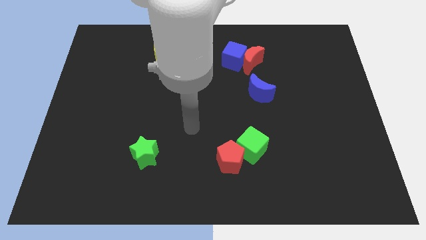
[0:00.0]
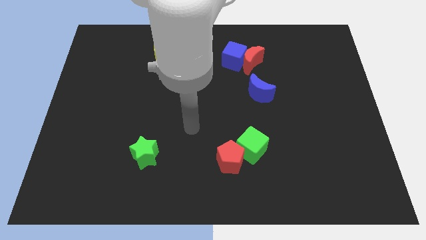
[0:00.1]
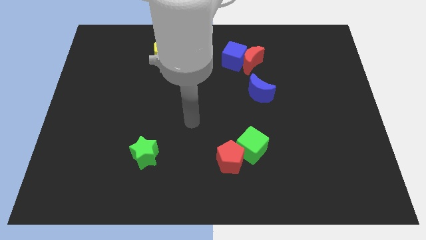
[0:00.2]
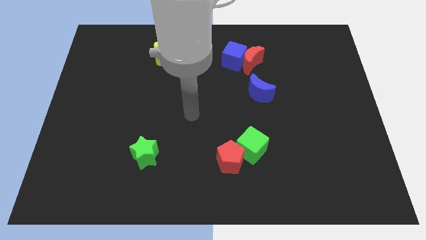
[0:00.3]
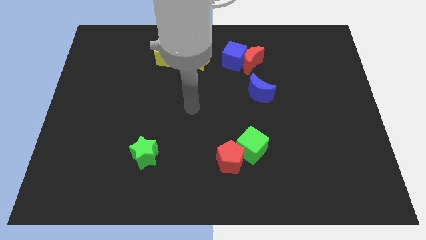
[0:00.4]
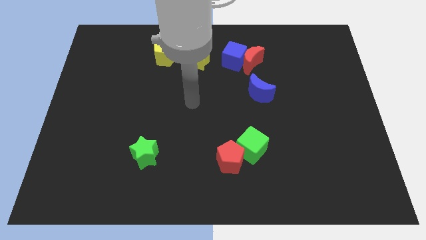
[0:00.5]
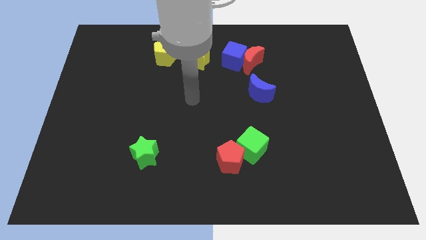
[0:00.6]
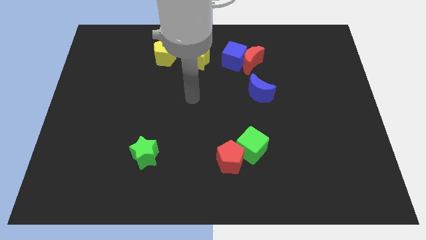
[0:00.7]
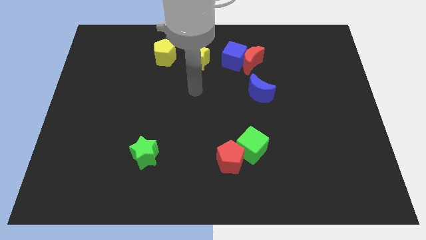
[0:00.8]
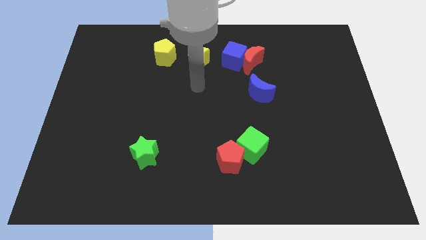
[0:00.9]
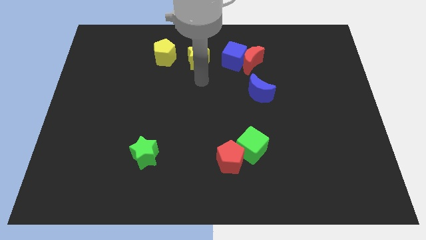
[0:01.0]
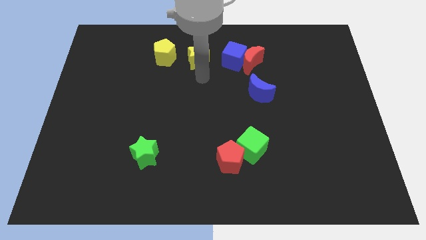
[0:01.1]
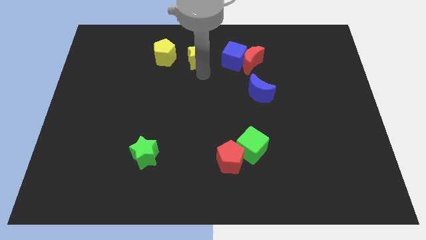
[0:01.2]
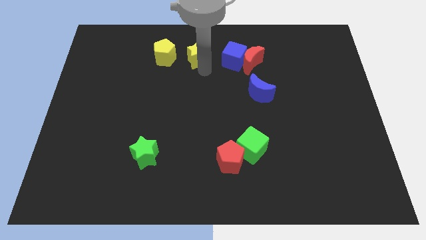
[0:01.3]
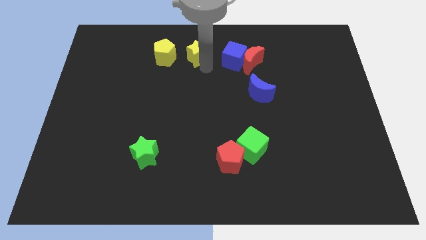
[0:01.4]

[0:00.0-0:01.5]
place the arm below the yellow star

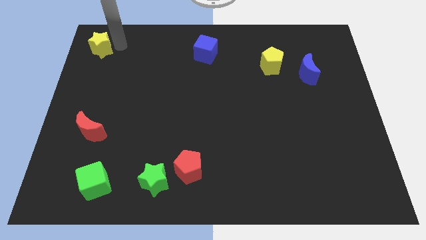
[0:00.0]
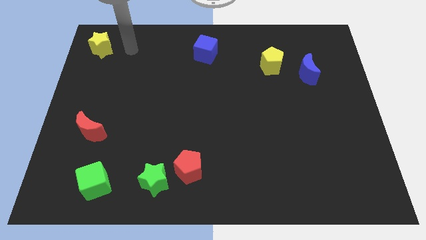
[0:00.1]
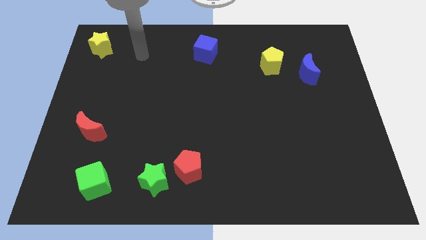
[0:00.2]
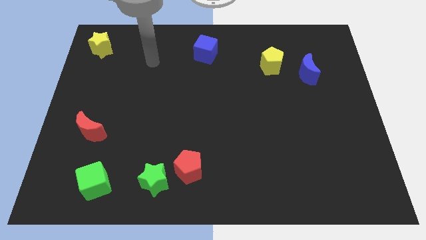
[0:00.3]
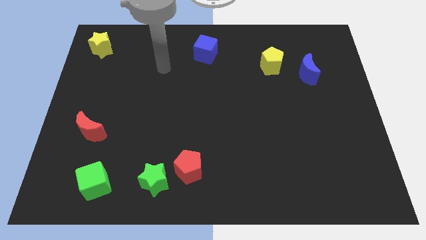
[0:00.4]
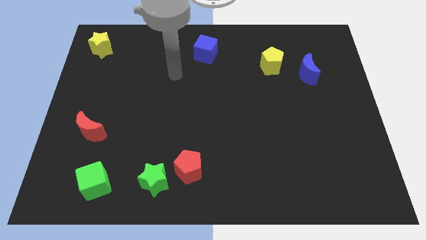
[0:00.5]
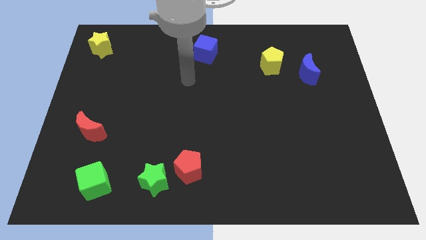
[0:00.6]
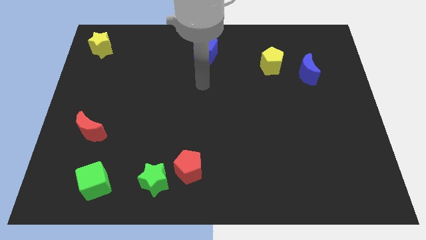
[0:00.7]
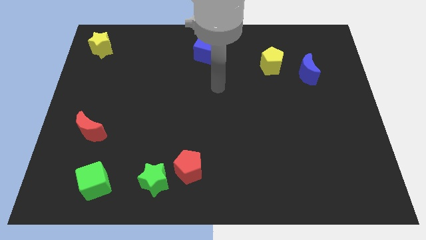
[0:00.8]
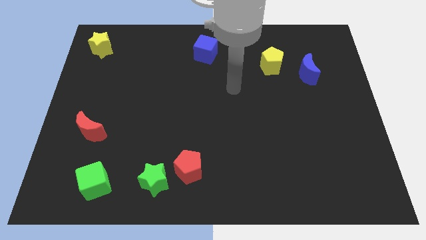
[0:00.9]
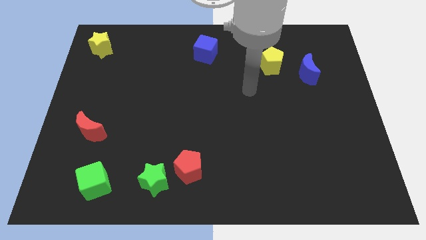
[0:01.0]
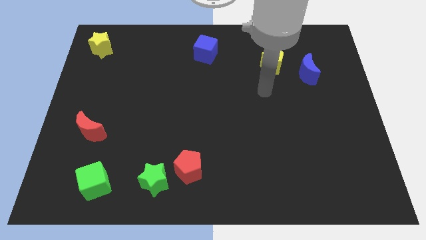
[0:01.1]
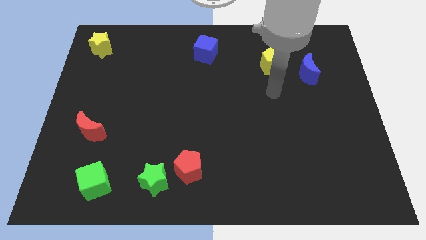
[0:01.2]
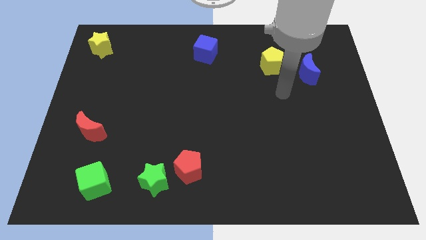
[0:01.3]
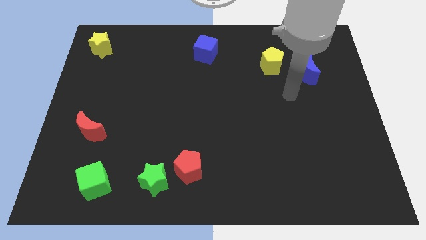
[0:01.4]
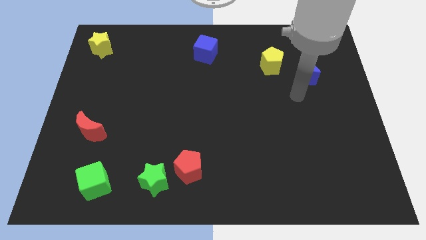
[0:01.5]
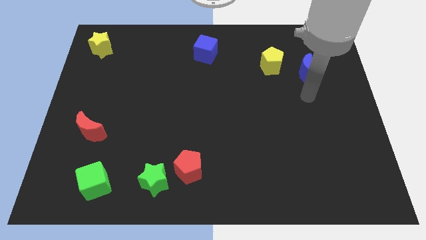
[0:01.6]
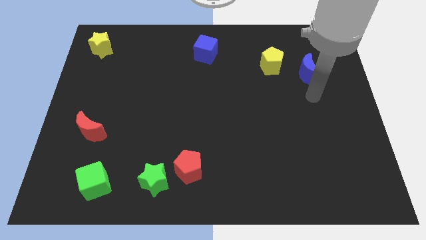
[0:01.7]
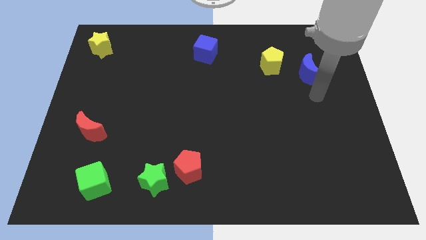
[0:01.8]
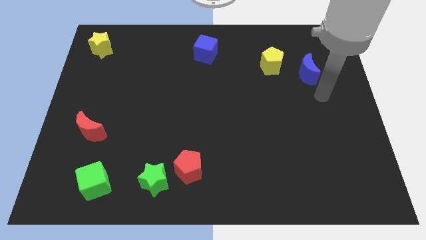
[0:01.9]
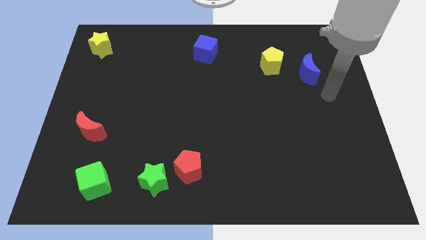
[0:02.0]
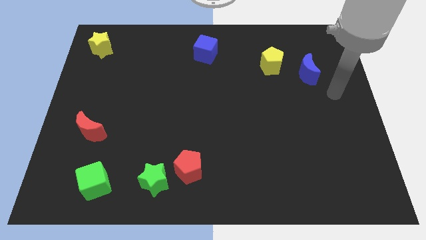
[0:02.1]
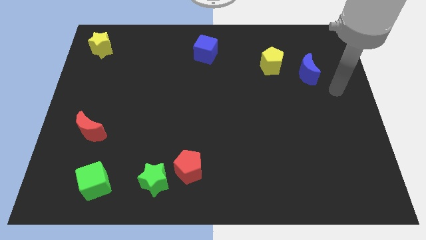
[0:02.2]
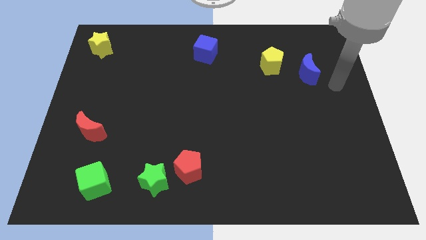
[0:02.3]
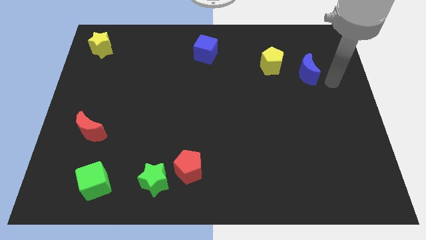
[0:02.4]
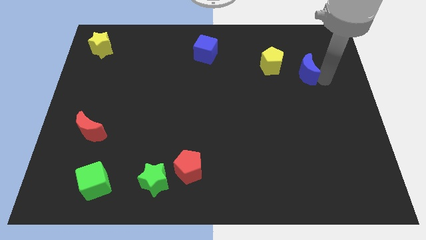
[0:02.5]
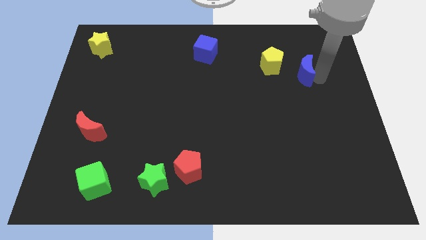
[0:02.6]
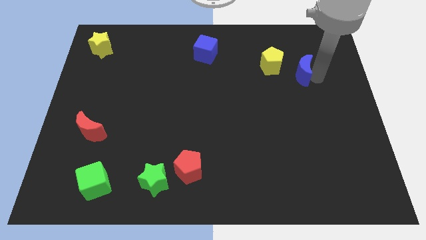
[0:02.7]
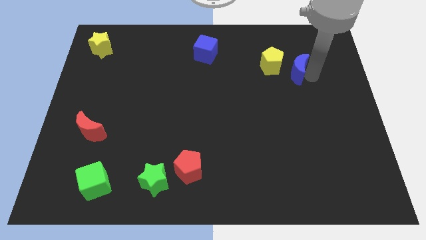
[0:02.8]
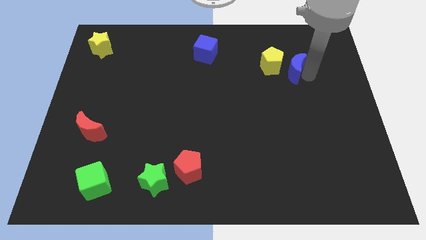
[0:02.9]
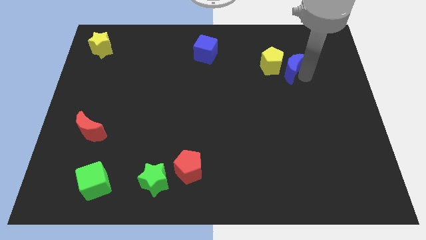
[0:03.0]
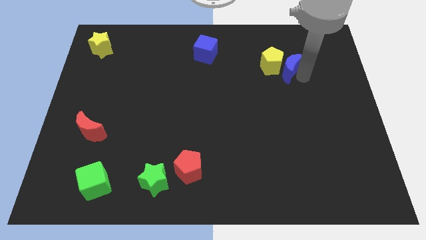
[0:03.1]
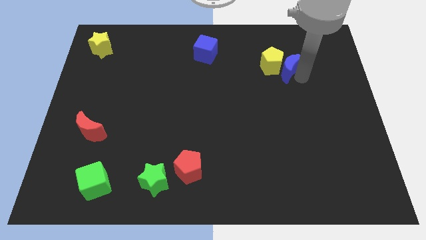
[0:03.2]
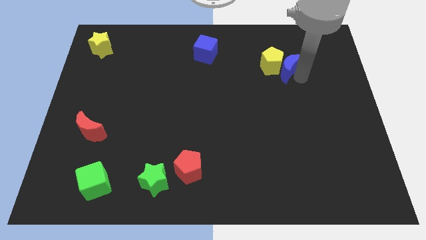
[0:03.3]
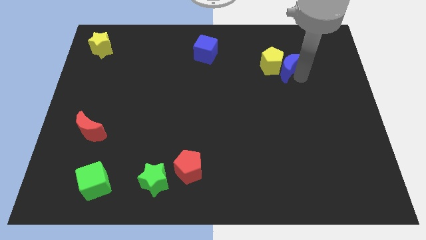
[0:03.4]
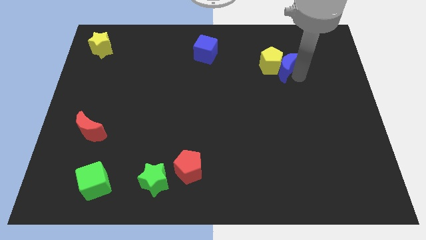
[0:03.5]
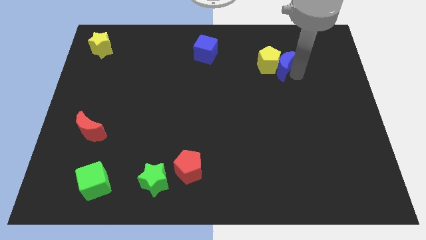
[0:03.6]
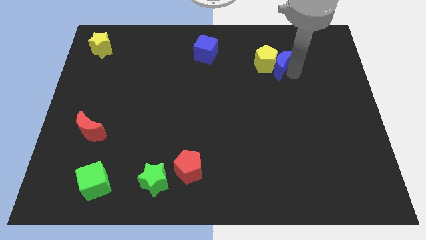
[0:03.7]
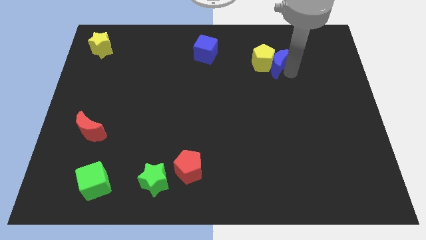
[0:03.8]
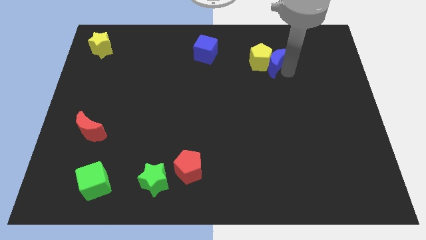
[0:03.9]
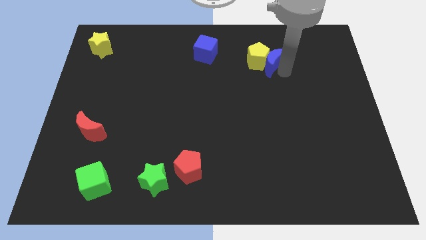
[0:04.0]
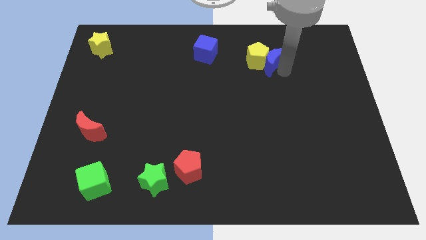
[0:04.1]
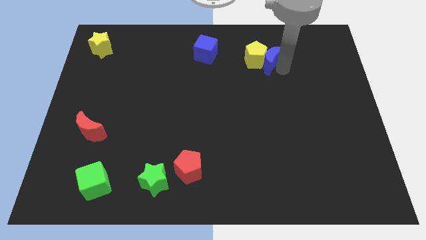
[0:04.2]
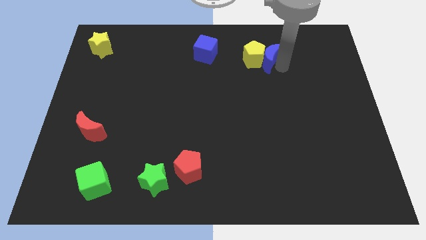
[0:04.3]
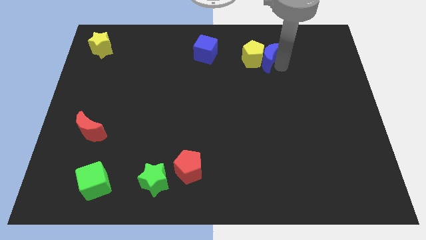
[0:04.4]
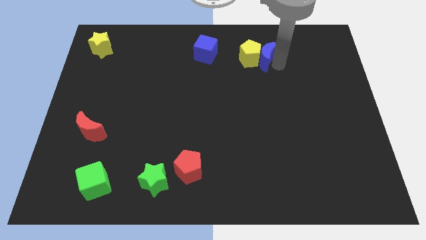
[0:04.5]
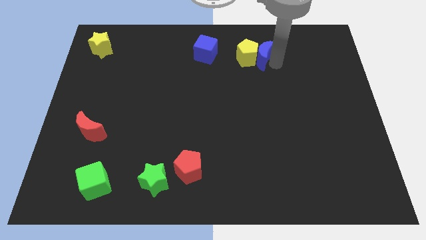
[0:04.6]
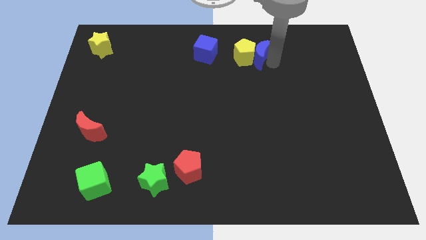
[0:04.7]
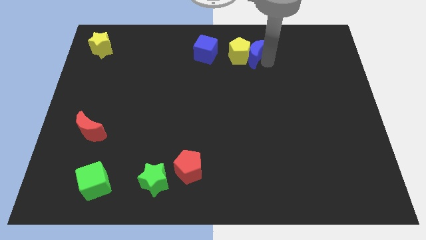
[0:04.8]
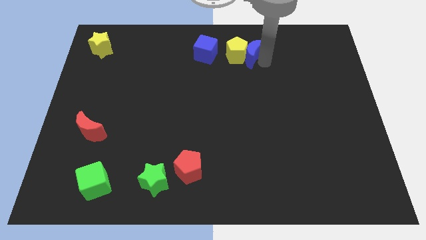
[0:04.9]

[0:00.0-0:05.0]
push the blue moon into the yellow pentagon

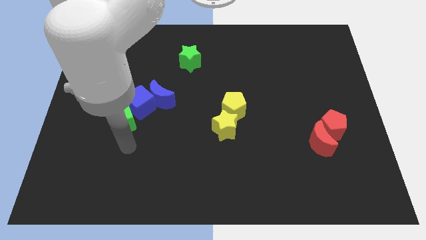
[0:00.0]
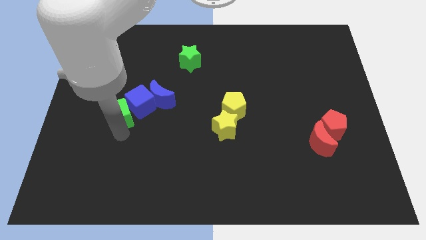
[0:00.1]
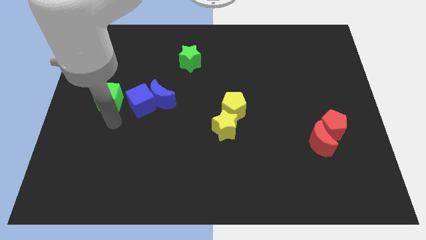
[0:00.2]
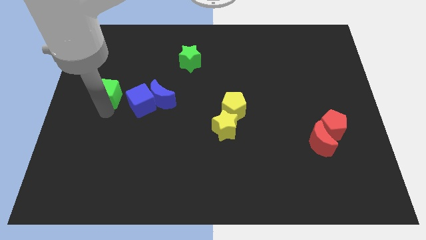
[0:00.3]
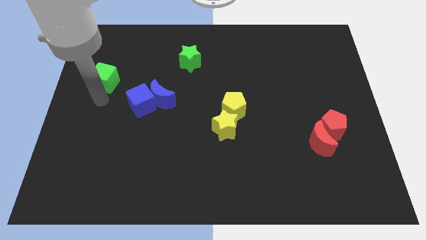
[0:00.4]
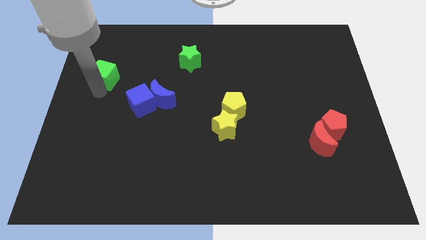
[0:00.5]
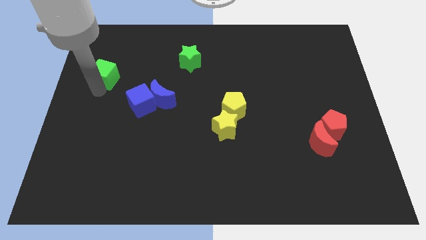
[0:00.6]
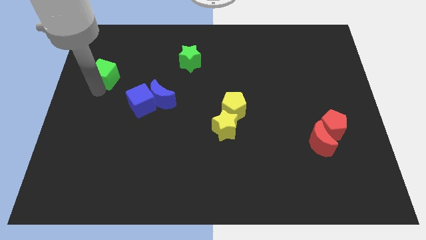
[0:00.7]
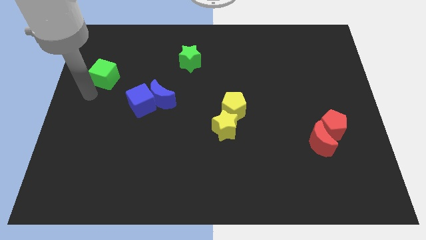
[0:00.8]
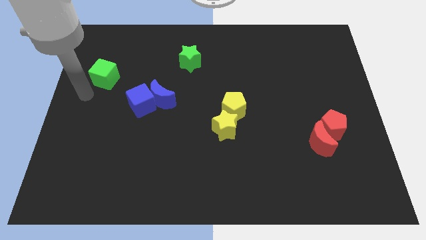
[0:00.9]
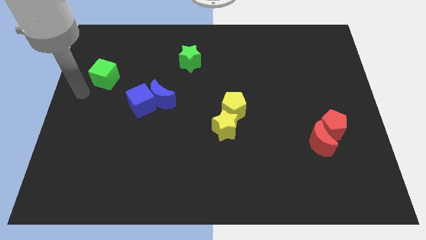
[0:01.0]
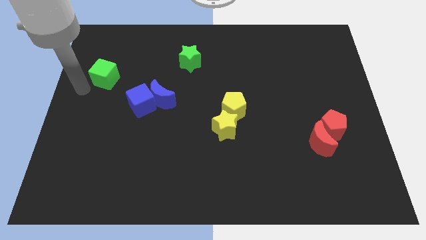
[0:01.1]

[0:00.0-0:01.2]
move green cube left diagonally towards blue cube

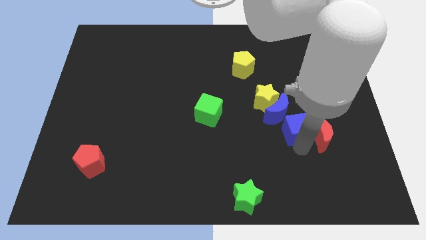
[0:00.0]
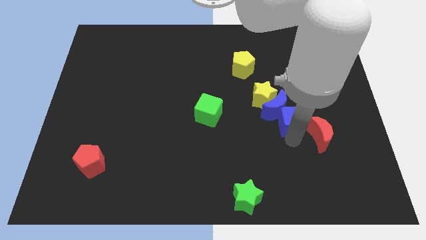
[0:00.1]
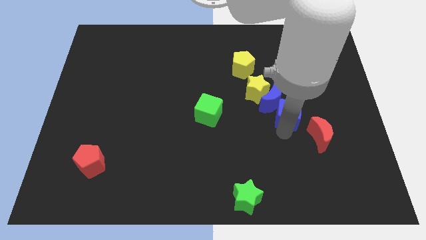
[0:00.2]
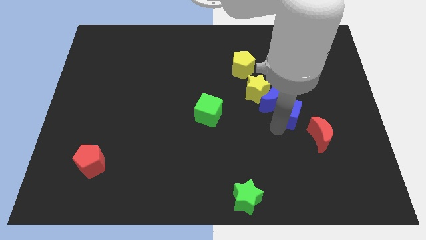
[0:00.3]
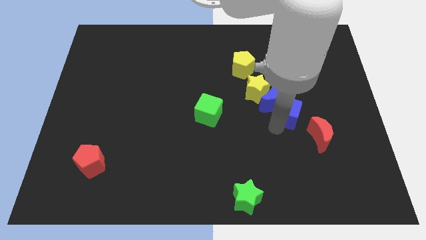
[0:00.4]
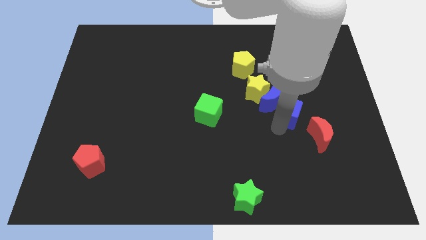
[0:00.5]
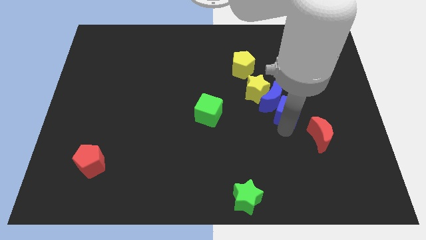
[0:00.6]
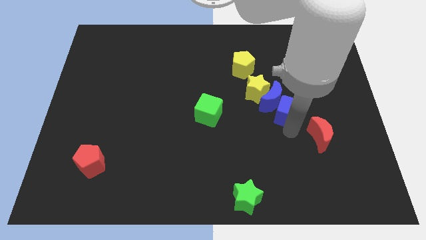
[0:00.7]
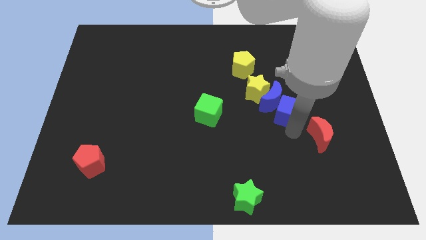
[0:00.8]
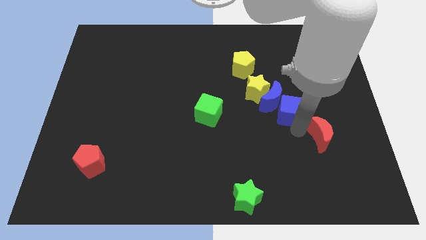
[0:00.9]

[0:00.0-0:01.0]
push the blue blocks and yellow star towards the yellow pentagon

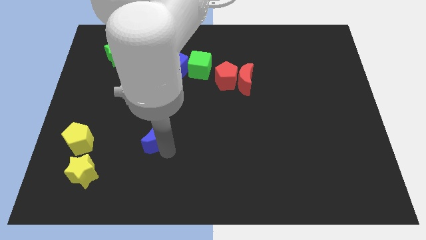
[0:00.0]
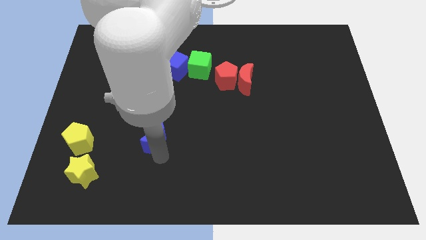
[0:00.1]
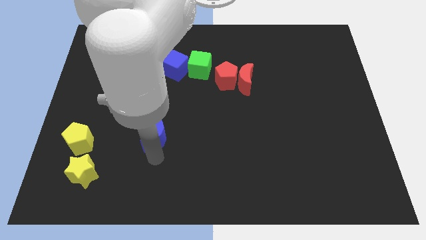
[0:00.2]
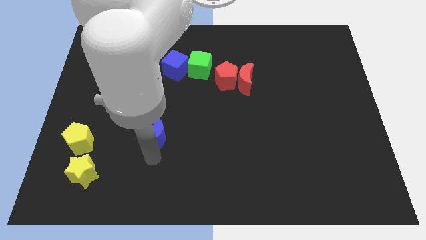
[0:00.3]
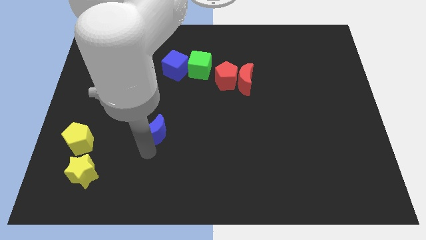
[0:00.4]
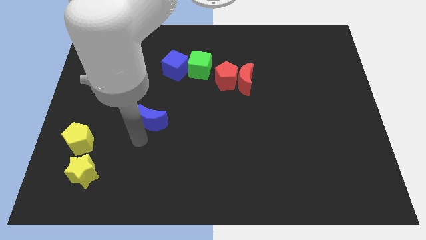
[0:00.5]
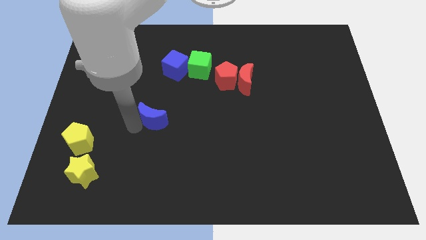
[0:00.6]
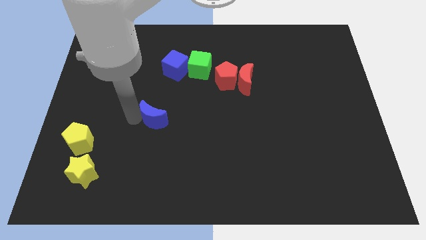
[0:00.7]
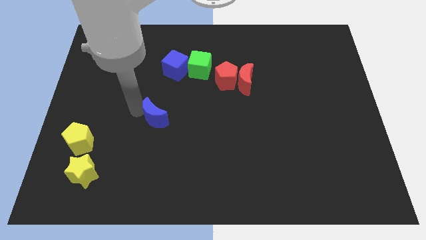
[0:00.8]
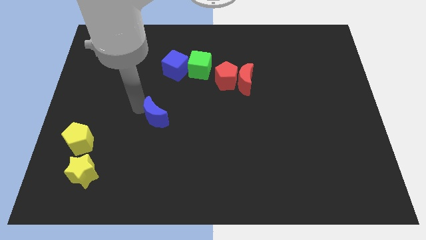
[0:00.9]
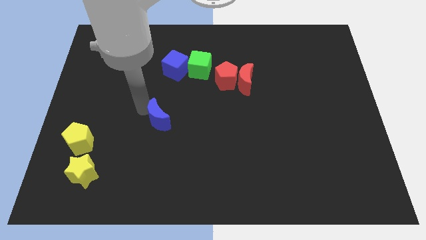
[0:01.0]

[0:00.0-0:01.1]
move blue moon towards blue cube
